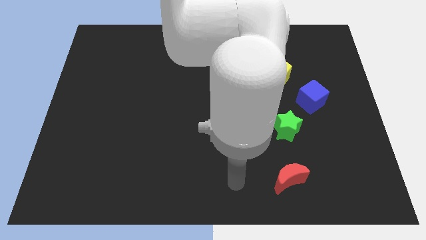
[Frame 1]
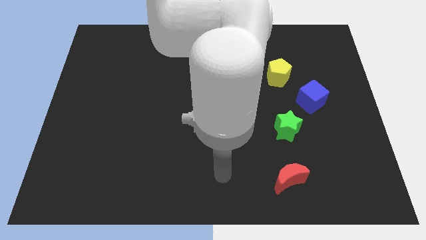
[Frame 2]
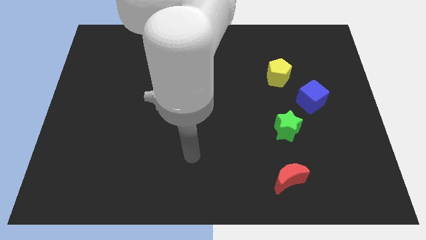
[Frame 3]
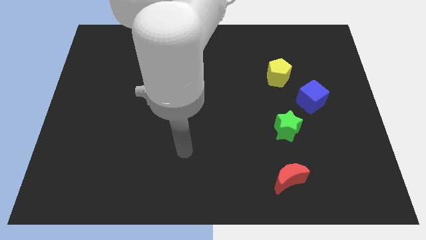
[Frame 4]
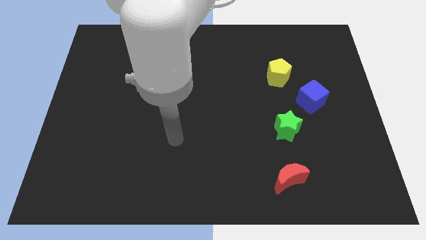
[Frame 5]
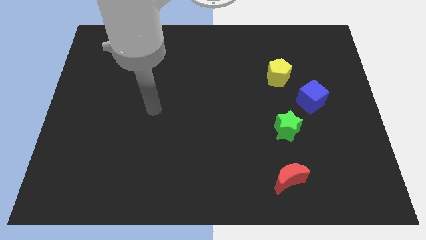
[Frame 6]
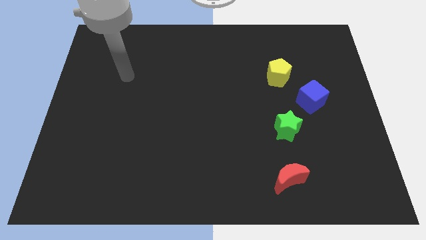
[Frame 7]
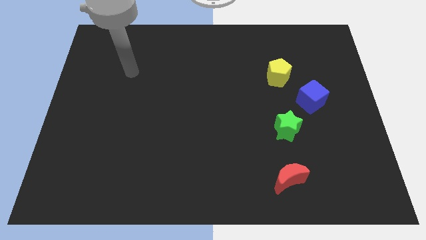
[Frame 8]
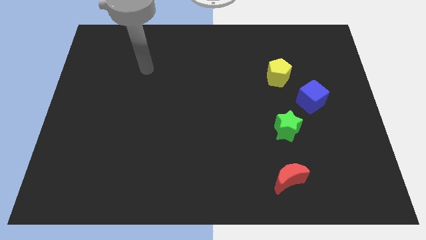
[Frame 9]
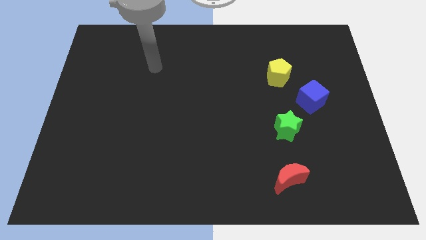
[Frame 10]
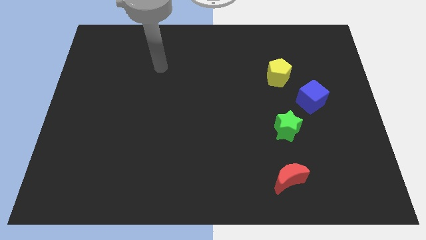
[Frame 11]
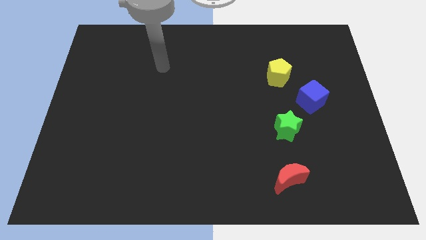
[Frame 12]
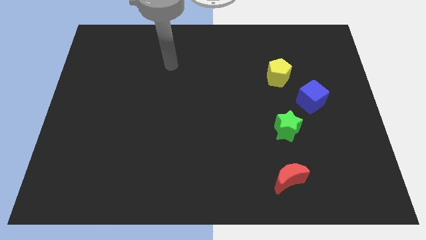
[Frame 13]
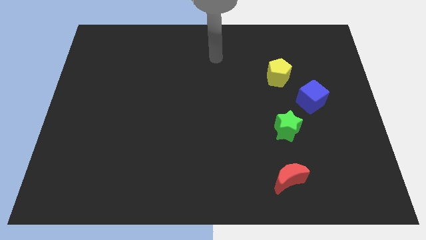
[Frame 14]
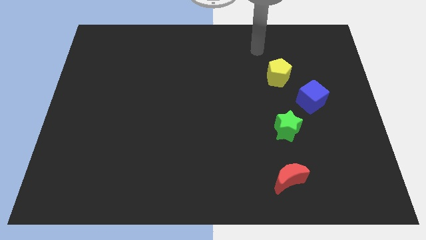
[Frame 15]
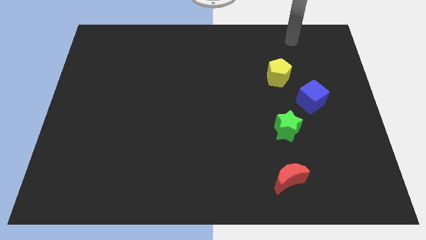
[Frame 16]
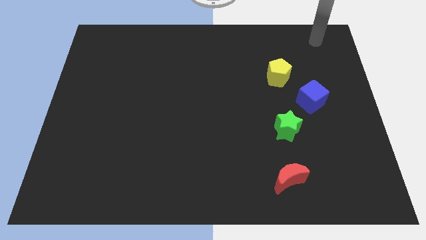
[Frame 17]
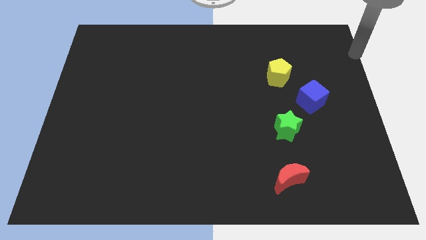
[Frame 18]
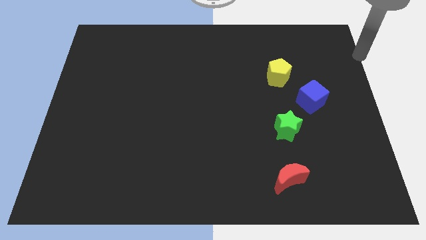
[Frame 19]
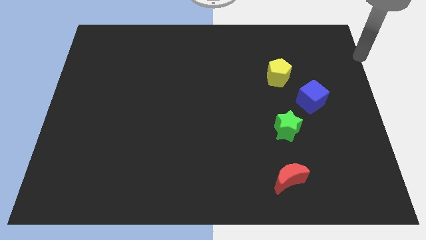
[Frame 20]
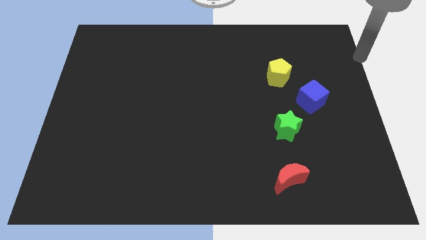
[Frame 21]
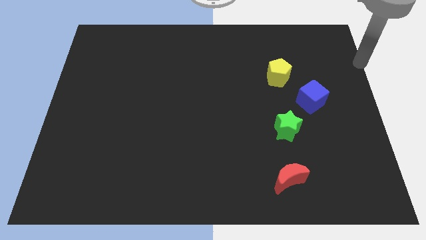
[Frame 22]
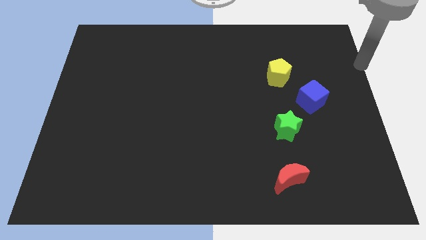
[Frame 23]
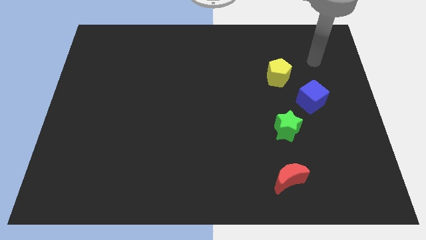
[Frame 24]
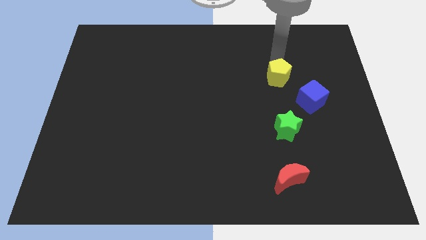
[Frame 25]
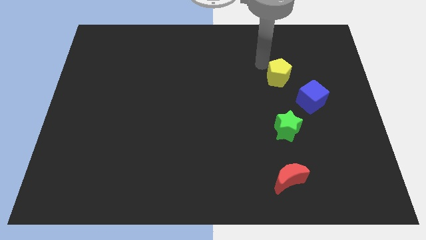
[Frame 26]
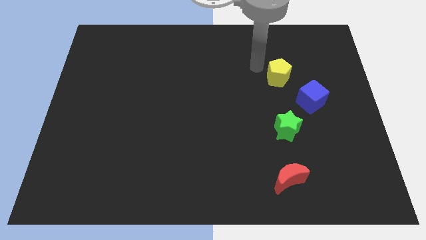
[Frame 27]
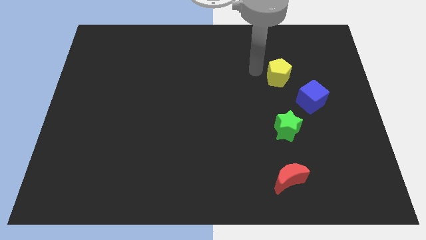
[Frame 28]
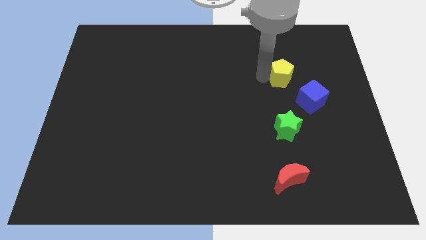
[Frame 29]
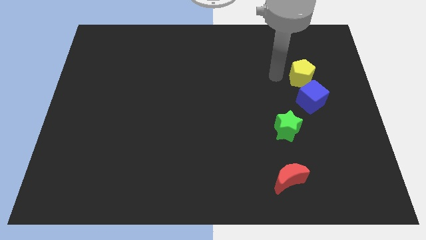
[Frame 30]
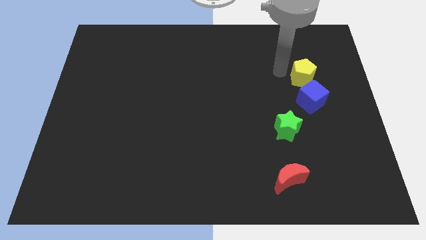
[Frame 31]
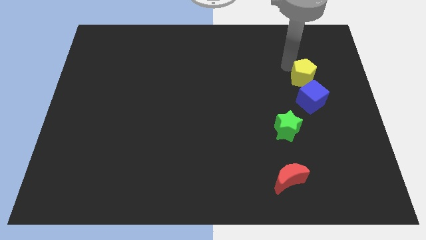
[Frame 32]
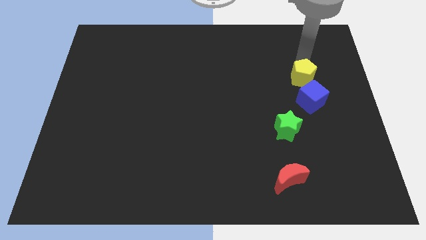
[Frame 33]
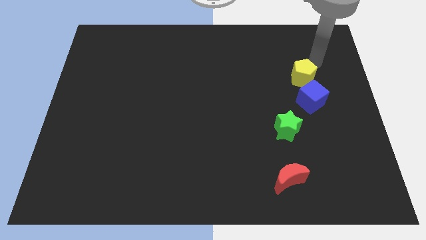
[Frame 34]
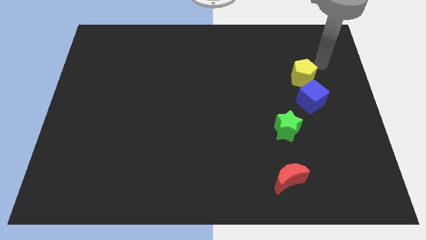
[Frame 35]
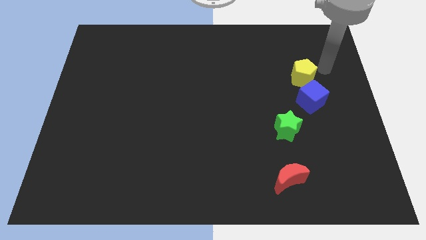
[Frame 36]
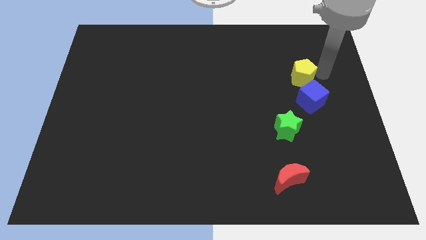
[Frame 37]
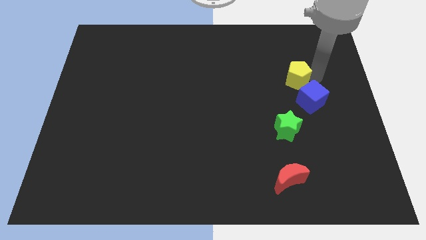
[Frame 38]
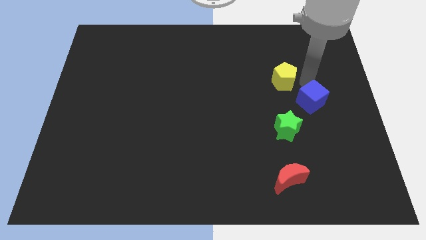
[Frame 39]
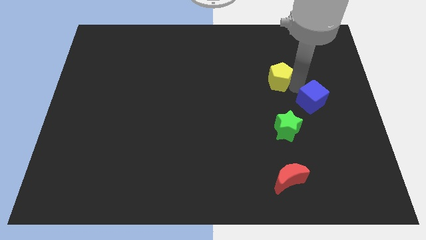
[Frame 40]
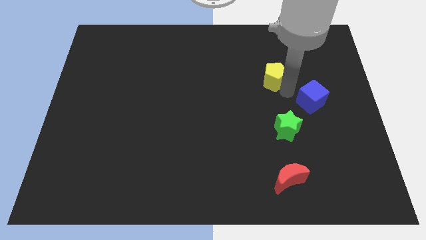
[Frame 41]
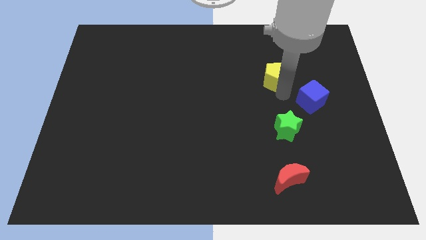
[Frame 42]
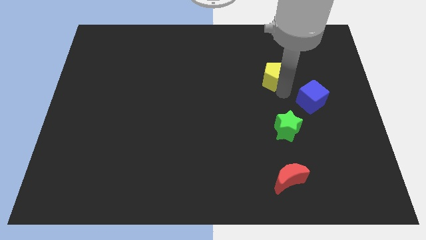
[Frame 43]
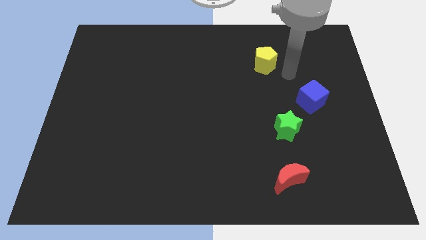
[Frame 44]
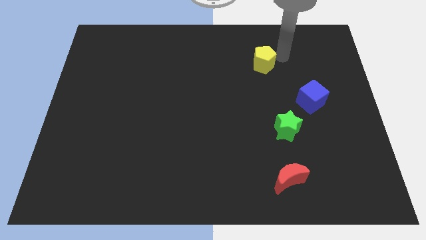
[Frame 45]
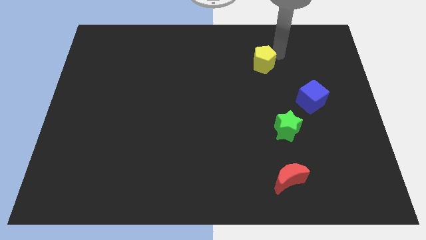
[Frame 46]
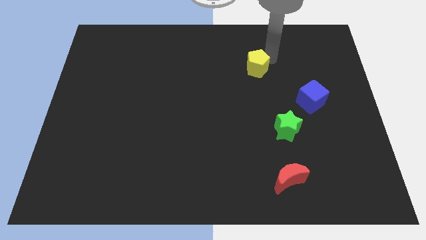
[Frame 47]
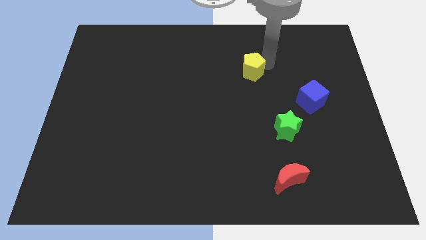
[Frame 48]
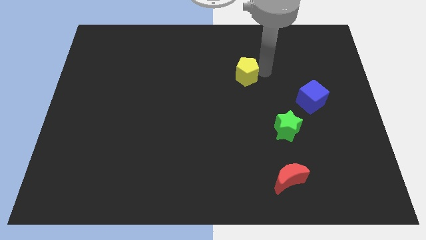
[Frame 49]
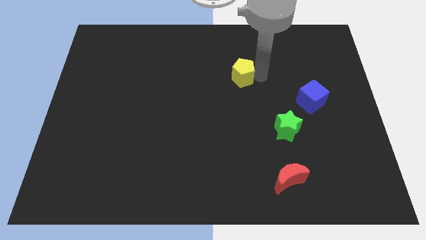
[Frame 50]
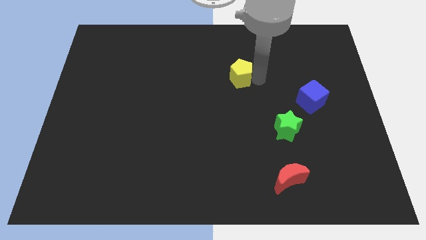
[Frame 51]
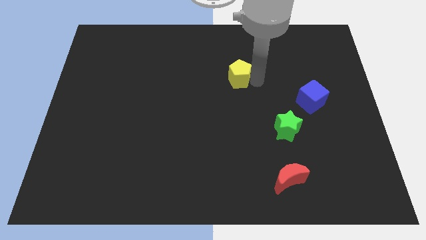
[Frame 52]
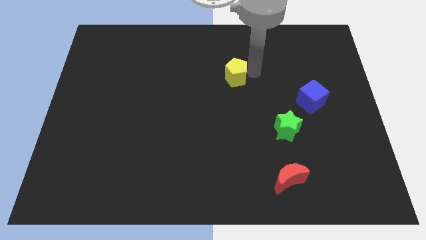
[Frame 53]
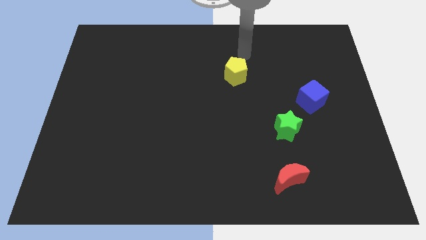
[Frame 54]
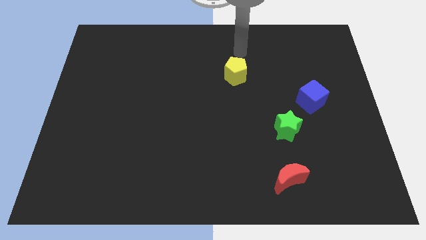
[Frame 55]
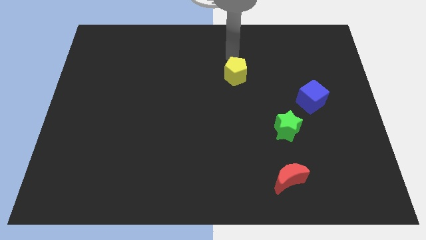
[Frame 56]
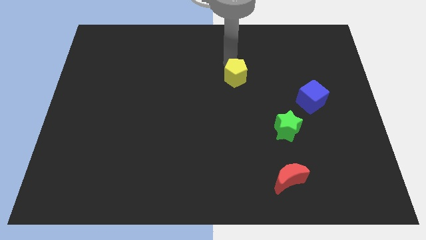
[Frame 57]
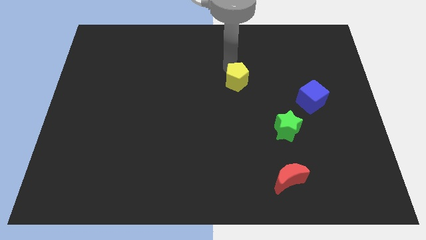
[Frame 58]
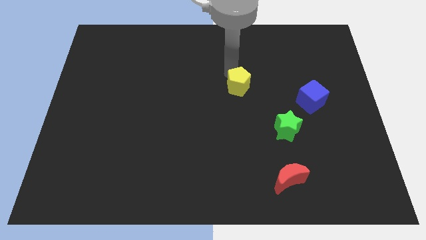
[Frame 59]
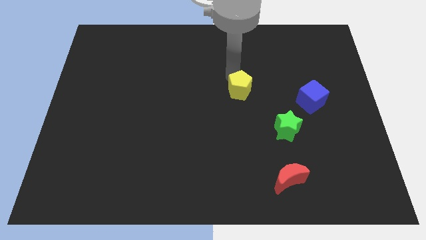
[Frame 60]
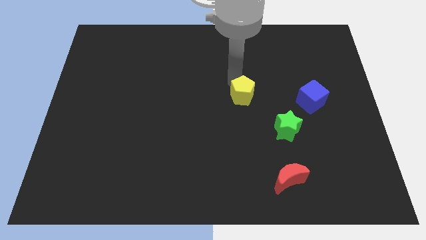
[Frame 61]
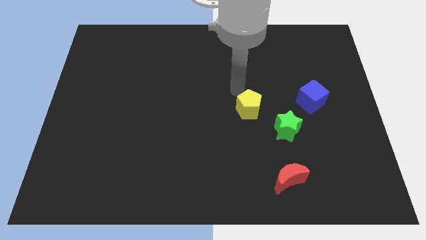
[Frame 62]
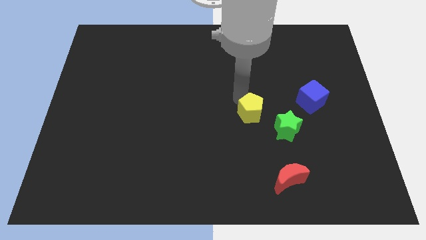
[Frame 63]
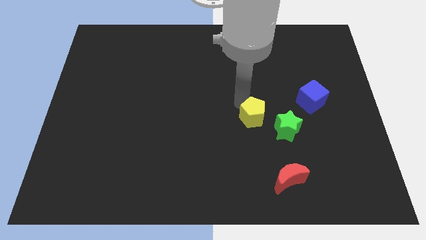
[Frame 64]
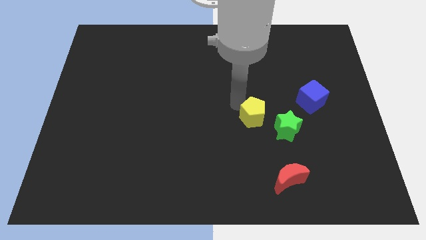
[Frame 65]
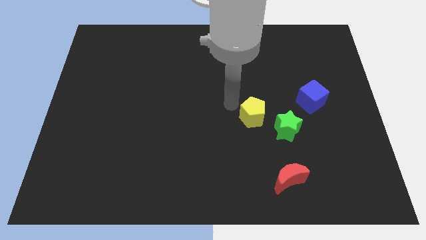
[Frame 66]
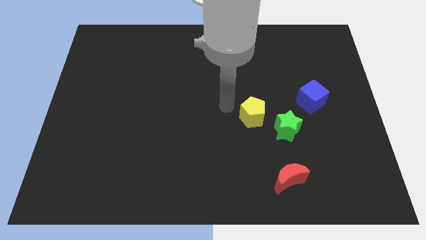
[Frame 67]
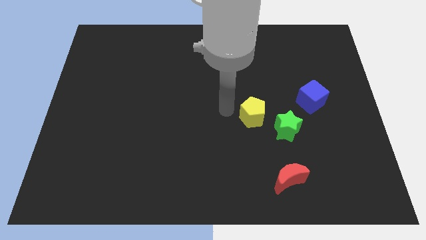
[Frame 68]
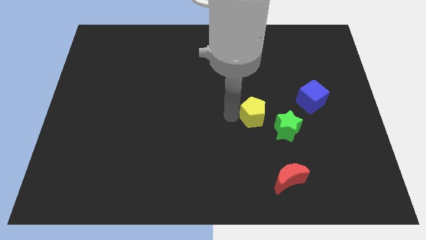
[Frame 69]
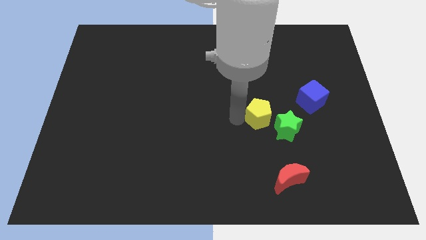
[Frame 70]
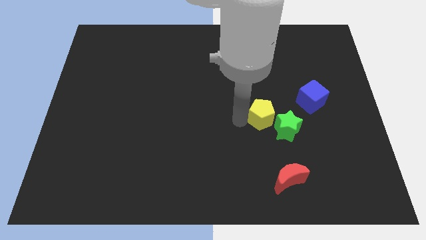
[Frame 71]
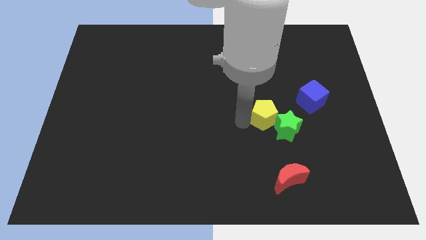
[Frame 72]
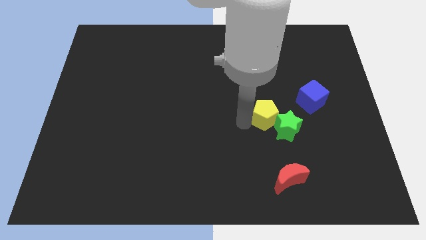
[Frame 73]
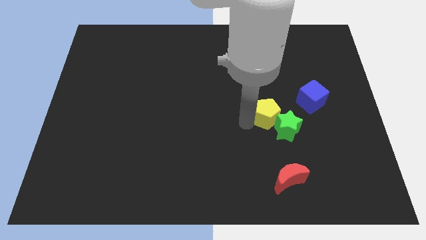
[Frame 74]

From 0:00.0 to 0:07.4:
push the yellow block next to the green star

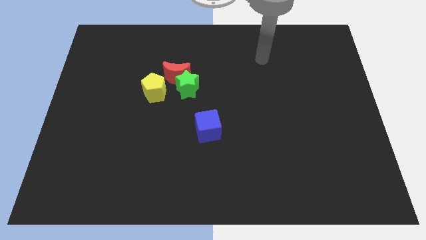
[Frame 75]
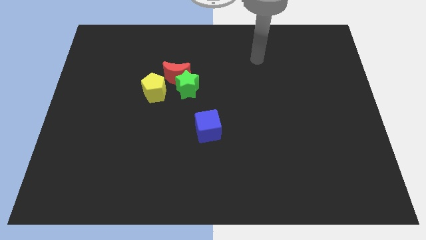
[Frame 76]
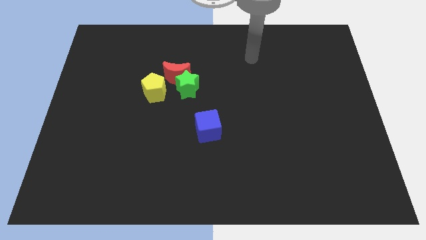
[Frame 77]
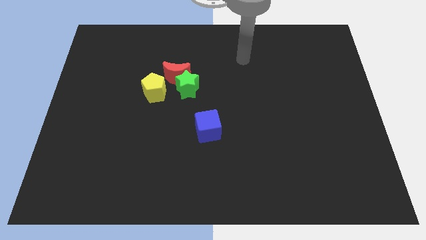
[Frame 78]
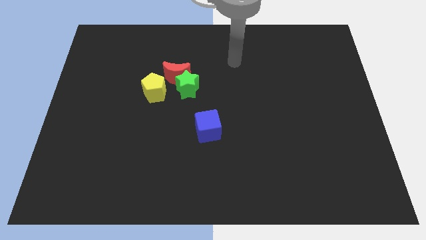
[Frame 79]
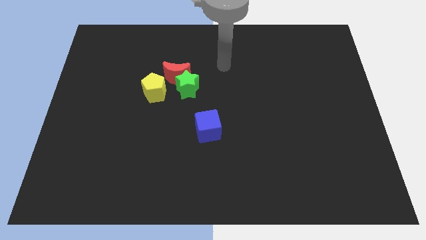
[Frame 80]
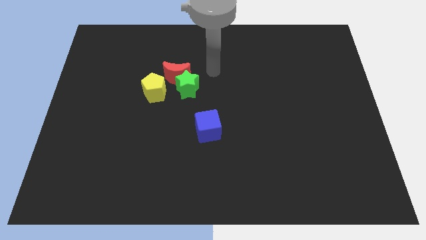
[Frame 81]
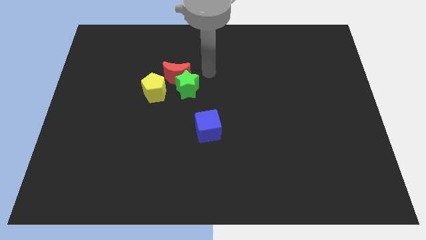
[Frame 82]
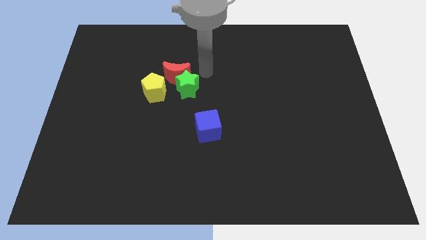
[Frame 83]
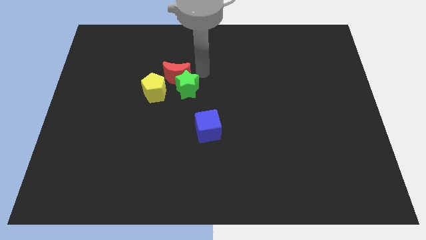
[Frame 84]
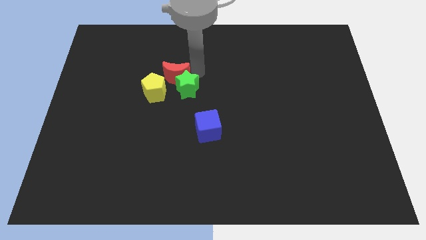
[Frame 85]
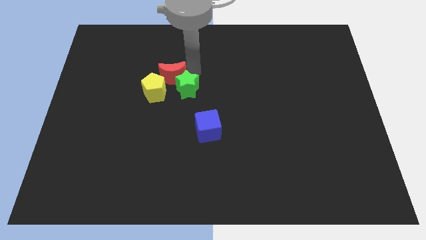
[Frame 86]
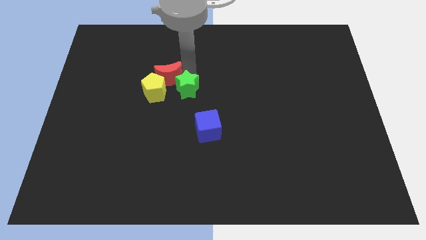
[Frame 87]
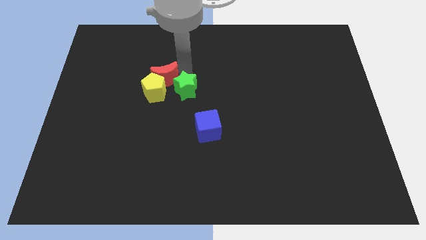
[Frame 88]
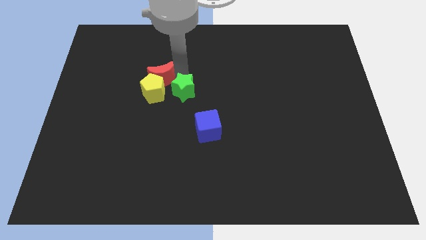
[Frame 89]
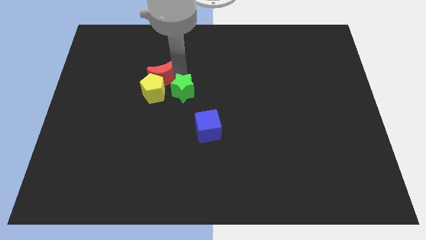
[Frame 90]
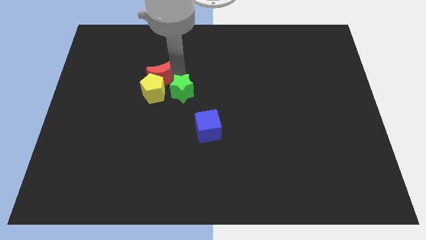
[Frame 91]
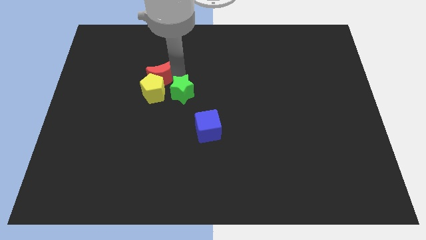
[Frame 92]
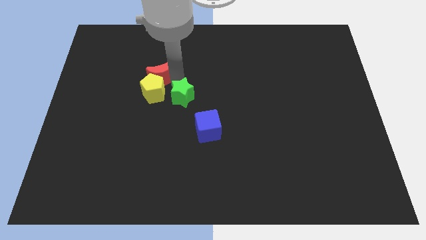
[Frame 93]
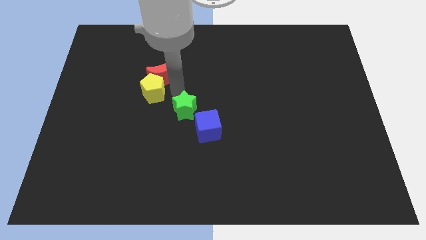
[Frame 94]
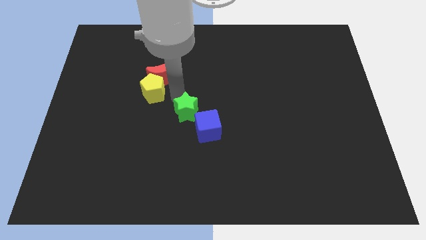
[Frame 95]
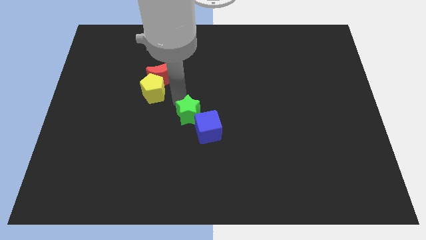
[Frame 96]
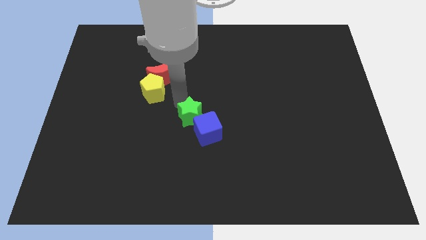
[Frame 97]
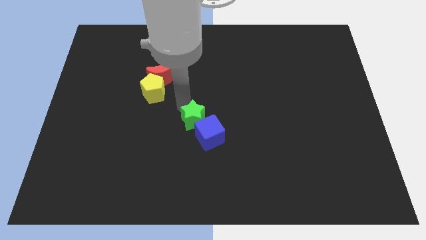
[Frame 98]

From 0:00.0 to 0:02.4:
push the star close to the blue block
